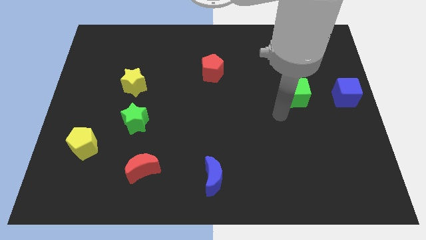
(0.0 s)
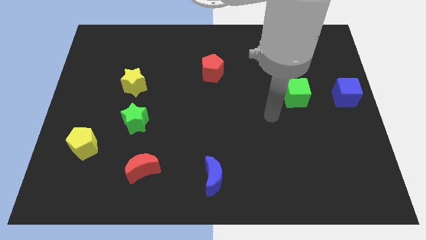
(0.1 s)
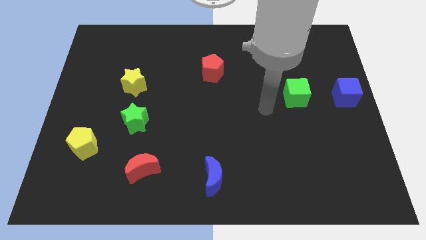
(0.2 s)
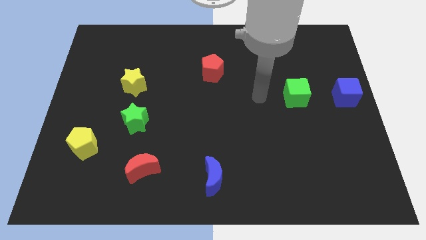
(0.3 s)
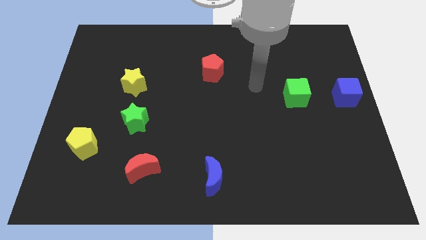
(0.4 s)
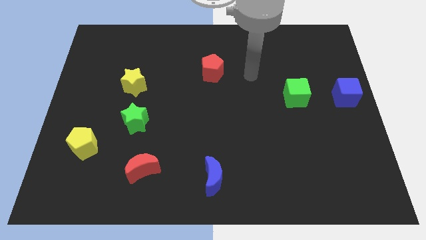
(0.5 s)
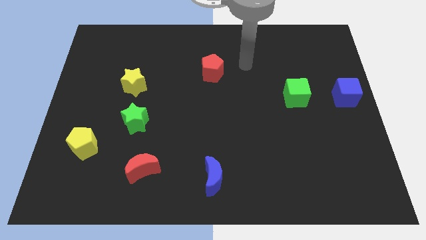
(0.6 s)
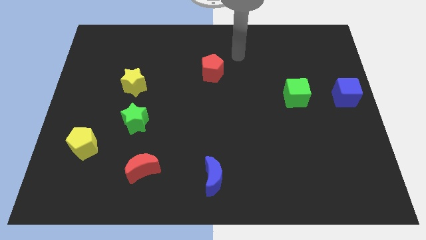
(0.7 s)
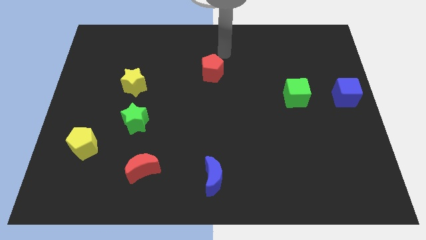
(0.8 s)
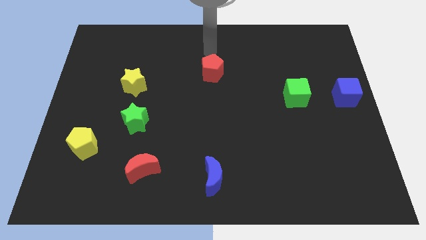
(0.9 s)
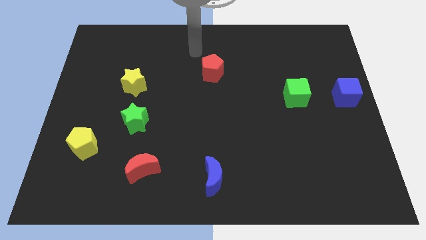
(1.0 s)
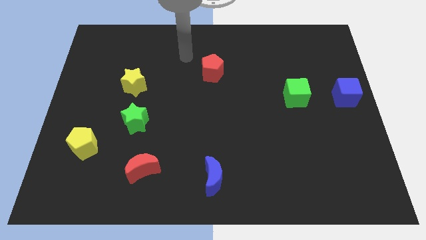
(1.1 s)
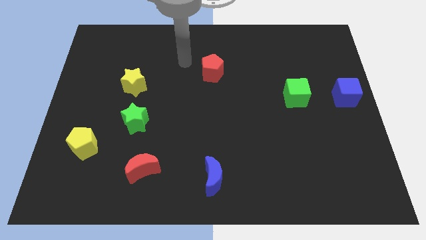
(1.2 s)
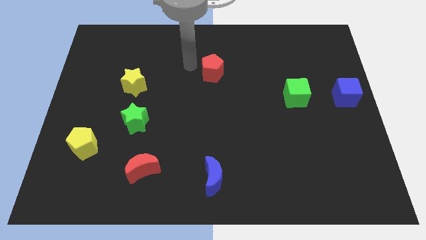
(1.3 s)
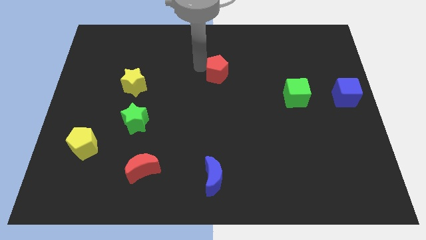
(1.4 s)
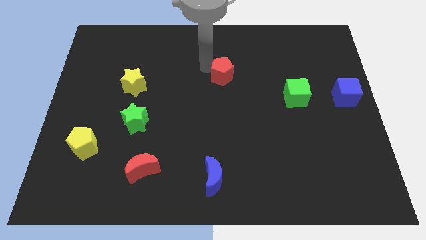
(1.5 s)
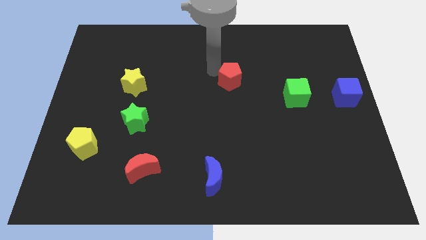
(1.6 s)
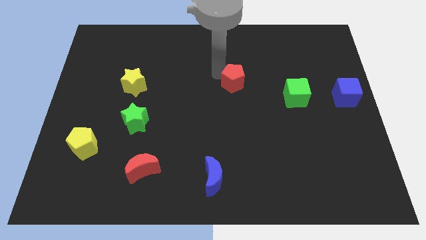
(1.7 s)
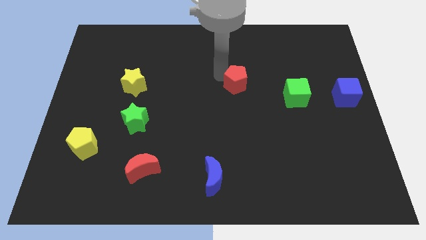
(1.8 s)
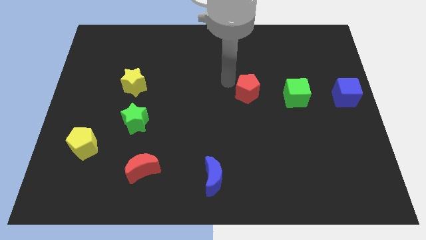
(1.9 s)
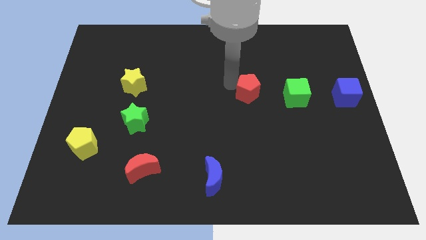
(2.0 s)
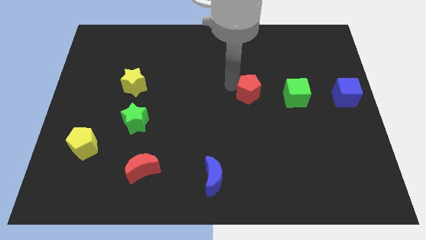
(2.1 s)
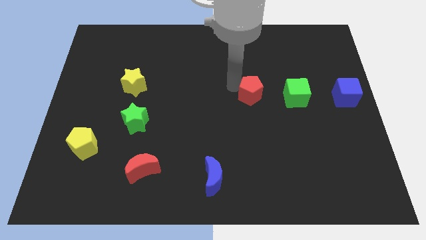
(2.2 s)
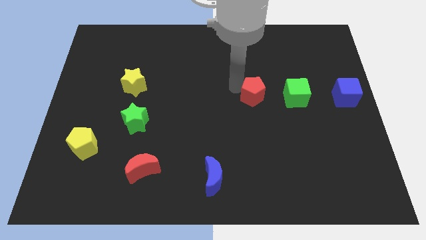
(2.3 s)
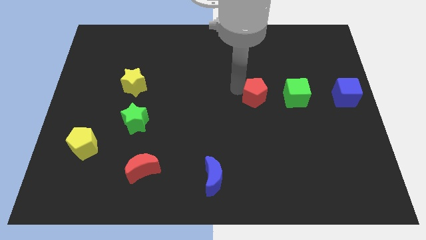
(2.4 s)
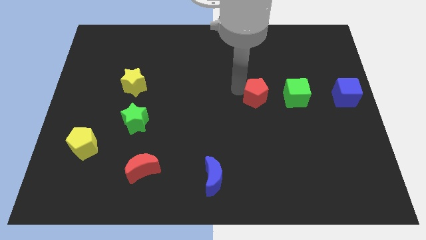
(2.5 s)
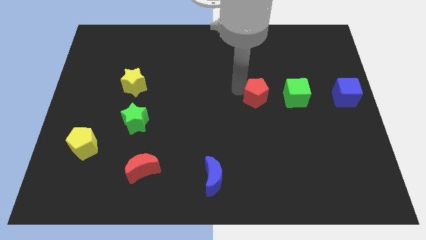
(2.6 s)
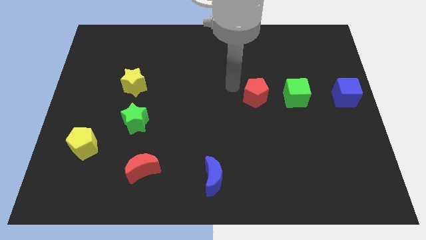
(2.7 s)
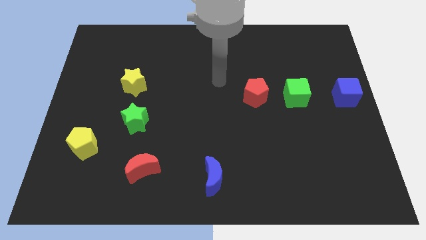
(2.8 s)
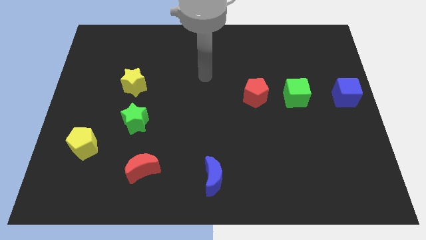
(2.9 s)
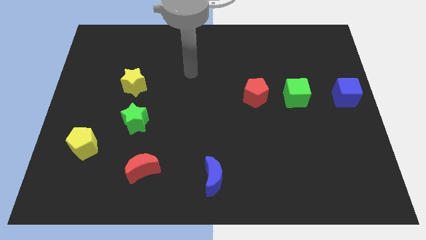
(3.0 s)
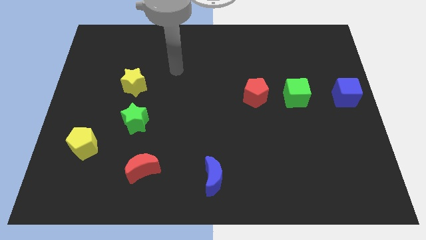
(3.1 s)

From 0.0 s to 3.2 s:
push the red pentagon towards the green cube

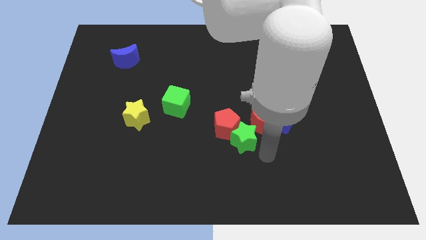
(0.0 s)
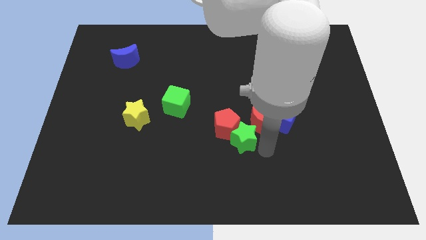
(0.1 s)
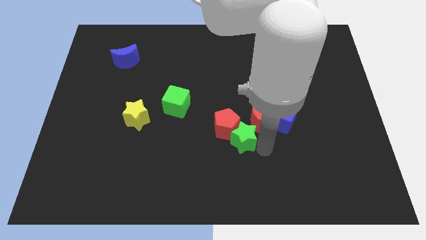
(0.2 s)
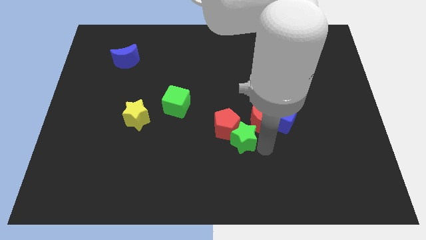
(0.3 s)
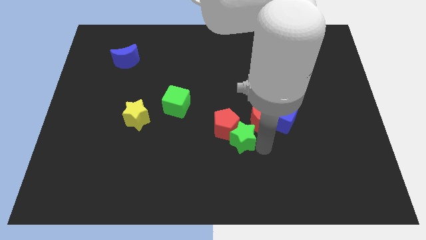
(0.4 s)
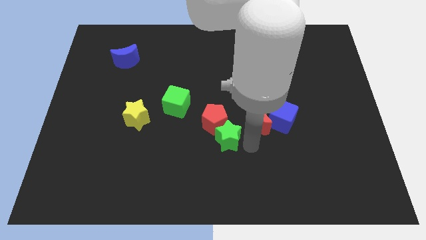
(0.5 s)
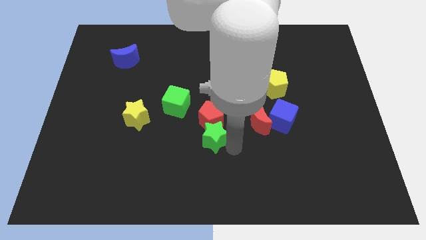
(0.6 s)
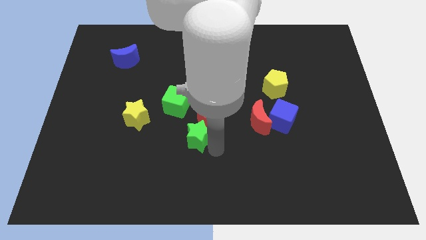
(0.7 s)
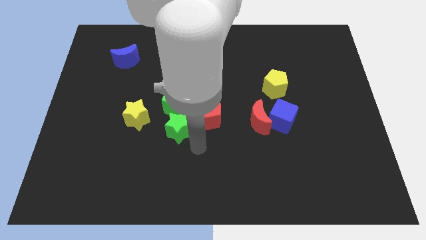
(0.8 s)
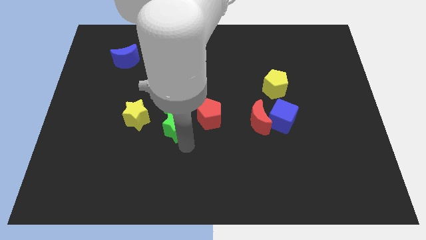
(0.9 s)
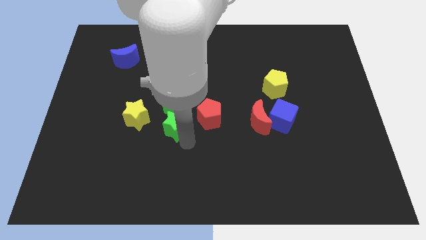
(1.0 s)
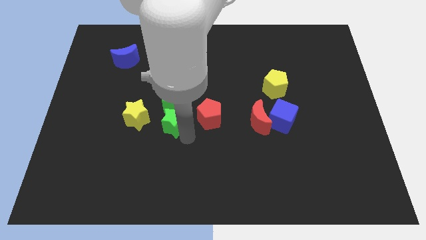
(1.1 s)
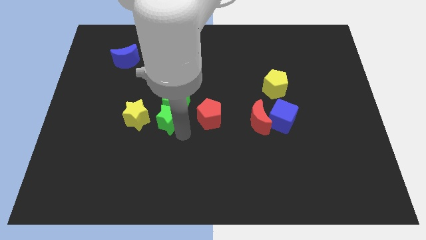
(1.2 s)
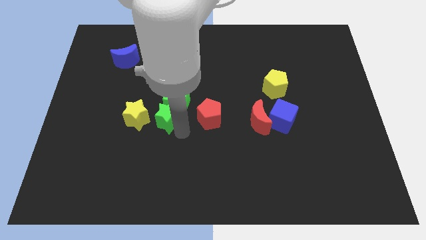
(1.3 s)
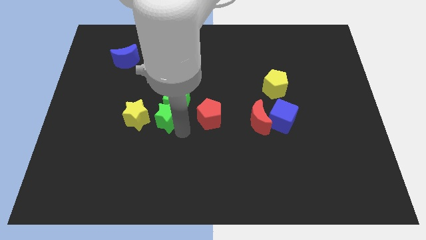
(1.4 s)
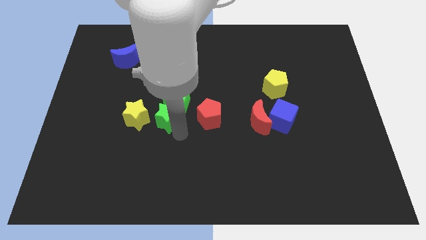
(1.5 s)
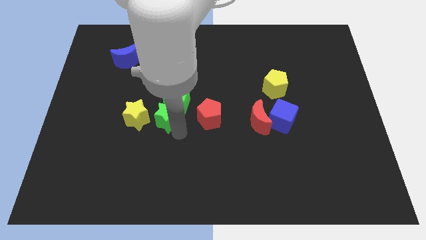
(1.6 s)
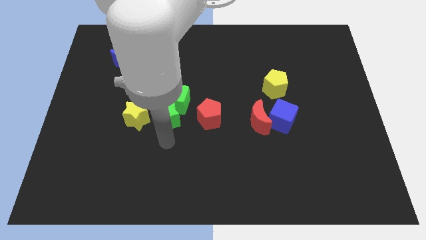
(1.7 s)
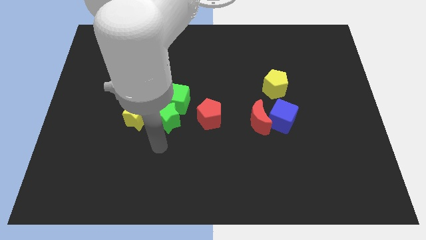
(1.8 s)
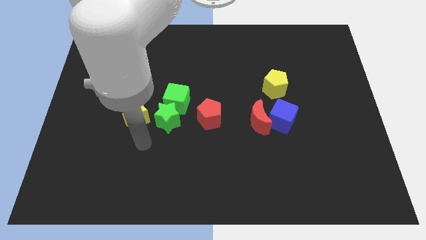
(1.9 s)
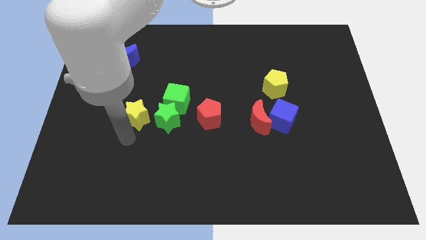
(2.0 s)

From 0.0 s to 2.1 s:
place green star below green cube

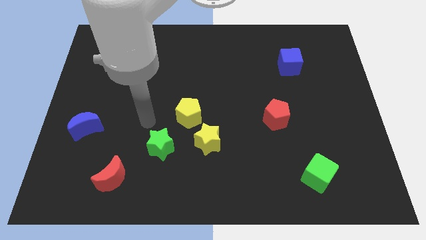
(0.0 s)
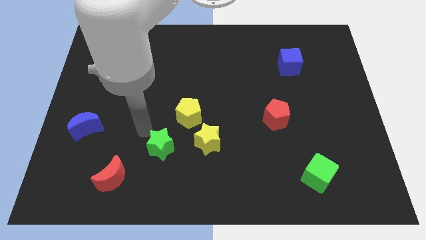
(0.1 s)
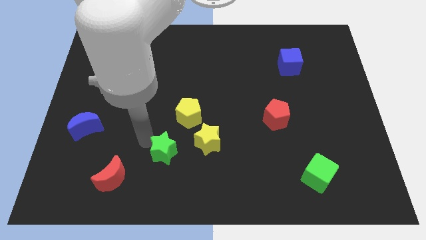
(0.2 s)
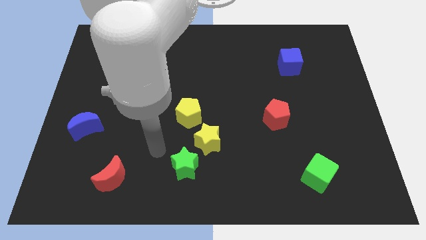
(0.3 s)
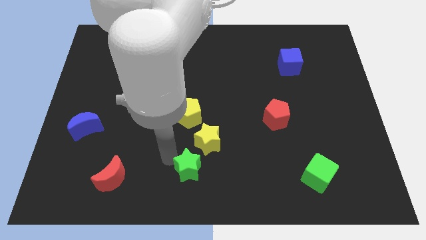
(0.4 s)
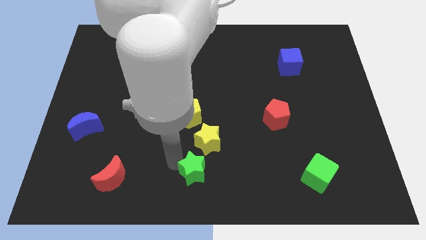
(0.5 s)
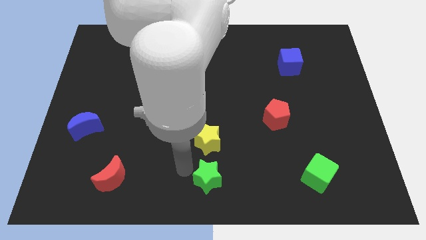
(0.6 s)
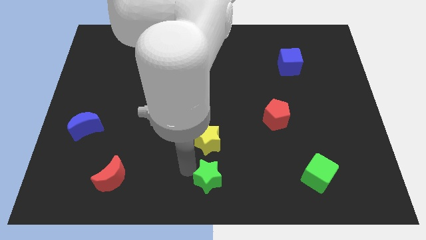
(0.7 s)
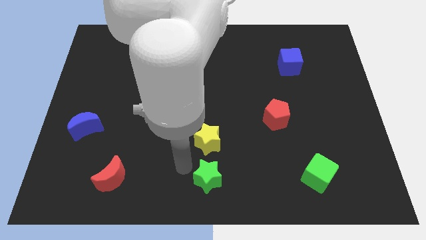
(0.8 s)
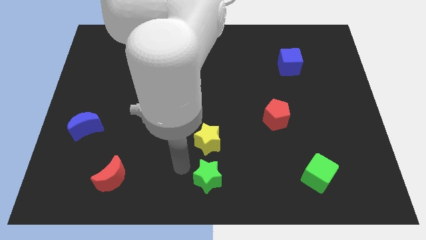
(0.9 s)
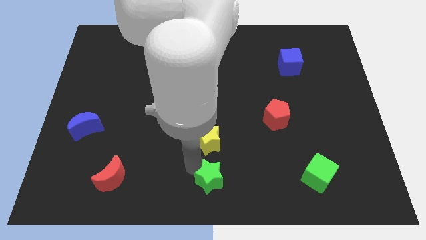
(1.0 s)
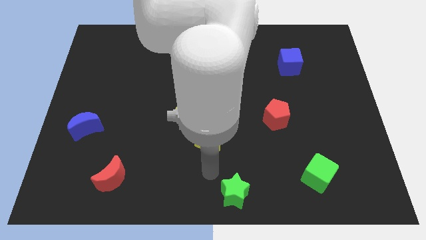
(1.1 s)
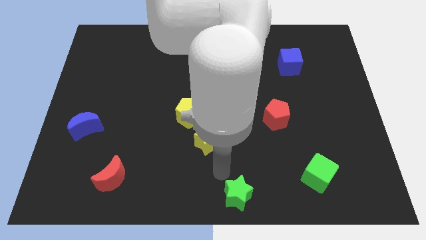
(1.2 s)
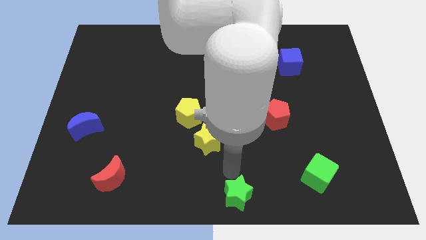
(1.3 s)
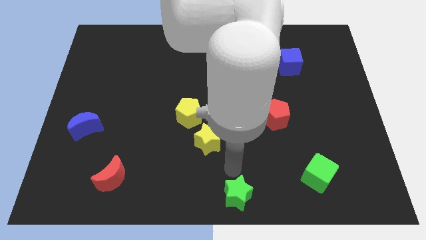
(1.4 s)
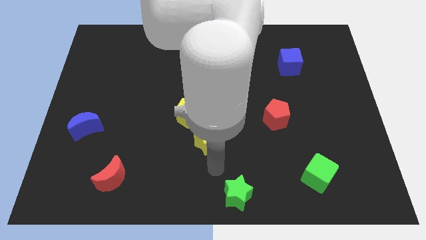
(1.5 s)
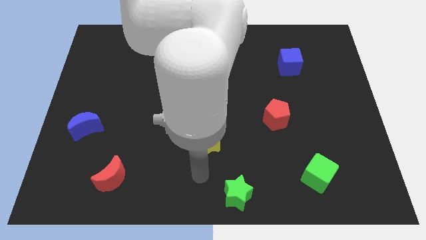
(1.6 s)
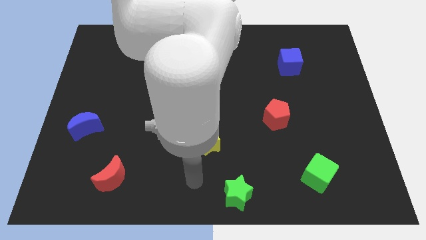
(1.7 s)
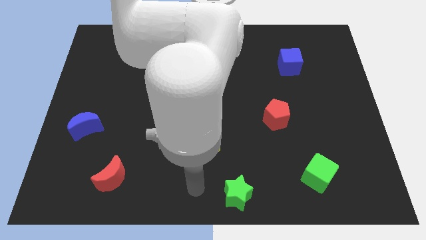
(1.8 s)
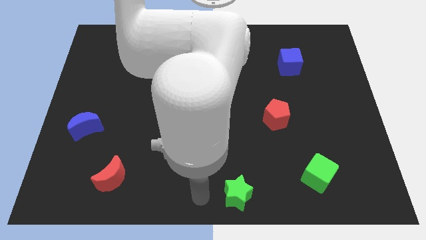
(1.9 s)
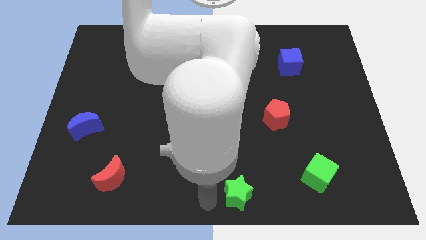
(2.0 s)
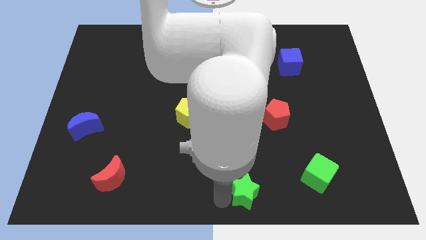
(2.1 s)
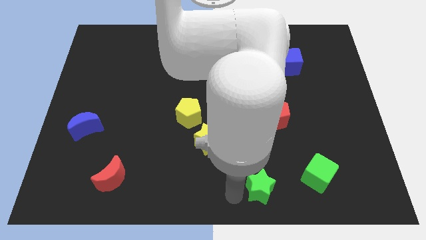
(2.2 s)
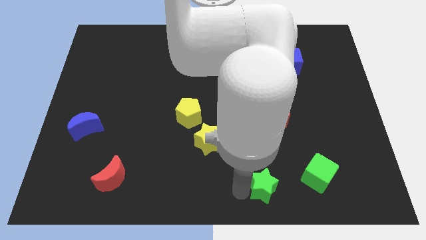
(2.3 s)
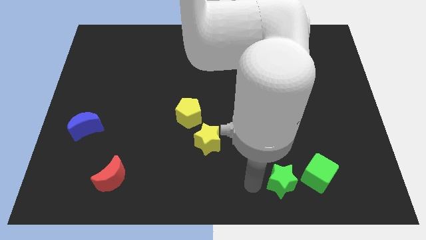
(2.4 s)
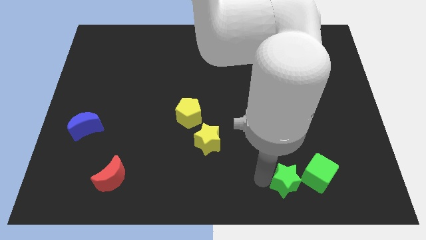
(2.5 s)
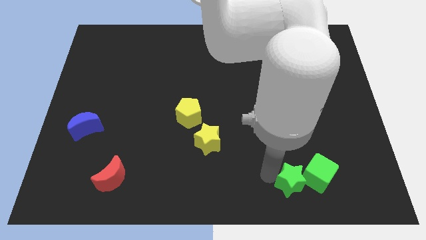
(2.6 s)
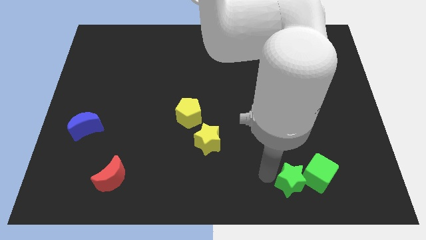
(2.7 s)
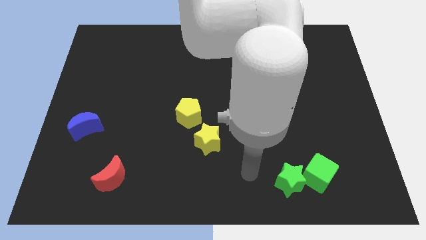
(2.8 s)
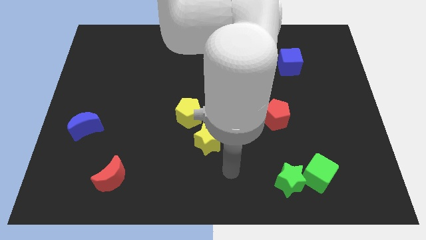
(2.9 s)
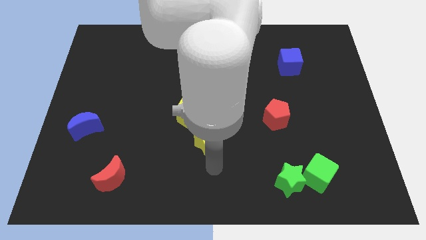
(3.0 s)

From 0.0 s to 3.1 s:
push the green star close to the green cube

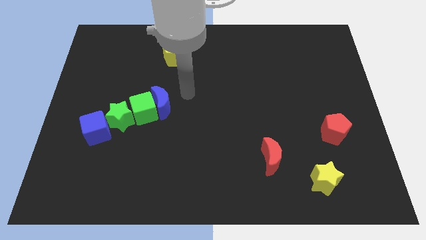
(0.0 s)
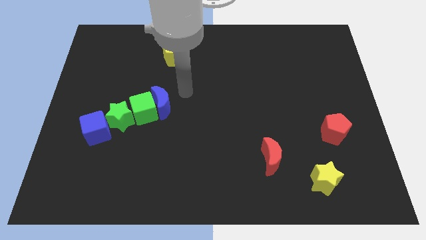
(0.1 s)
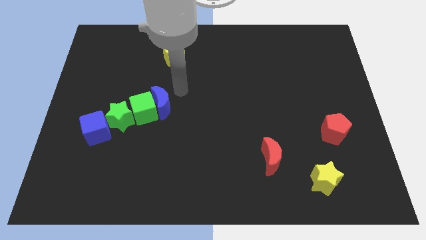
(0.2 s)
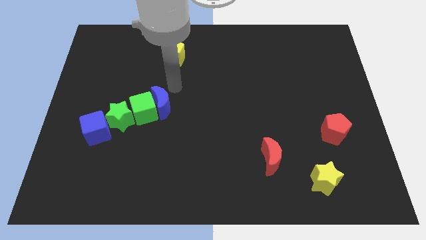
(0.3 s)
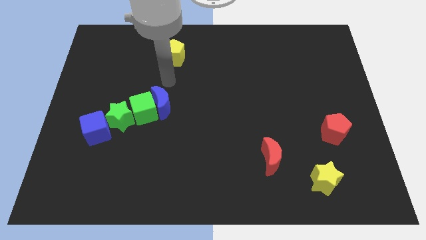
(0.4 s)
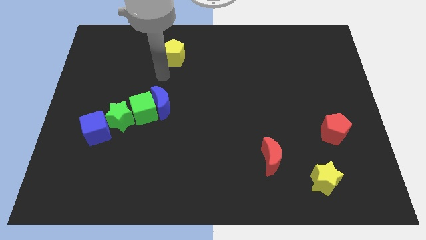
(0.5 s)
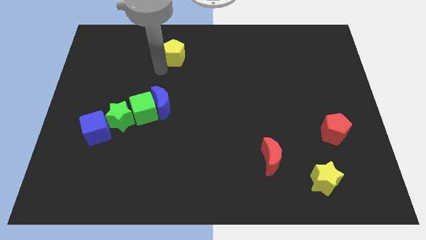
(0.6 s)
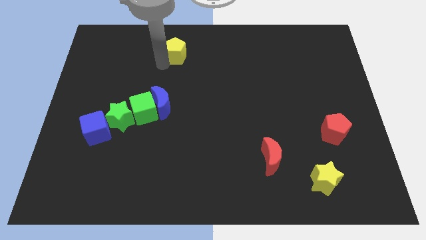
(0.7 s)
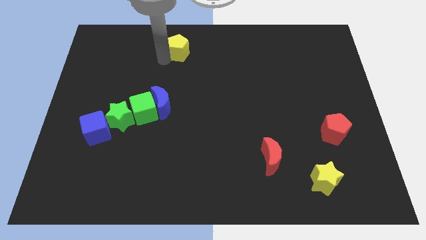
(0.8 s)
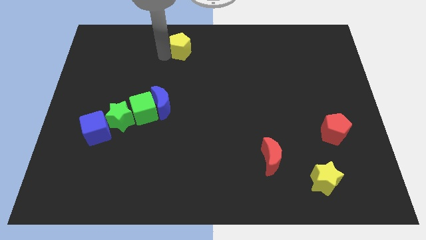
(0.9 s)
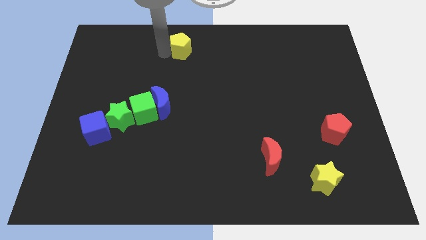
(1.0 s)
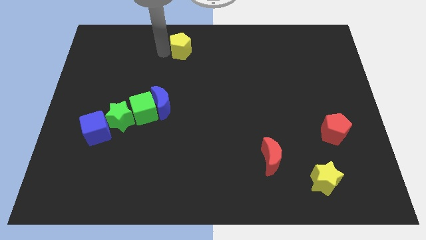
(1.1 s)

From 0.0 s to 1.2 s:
move the yellow pentagon slightly towards the top center of the board
